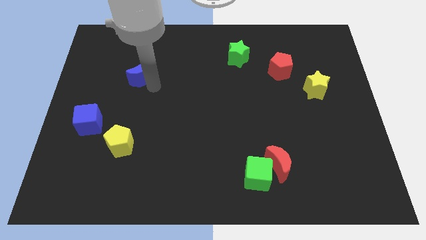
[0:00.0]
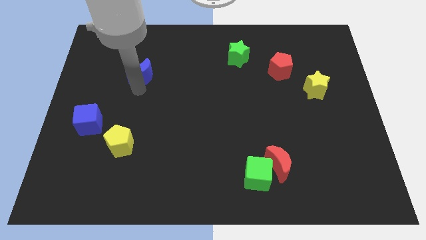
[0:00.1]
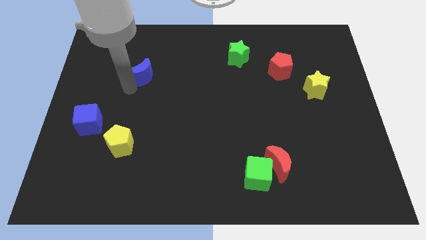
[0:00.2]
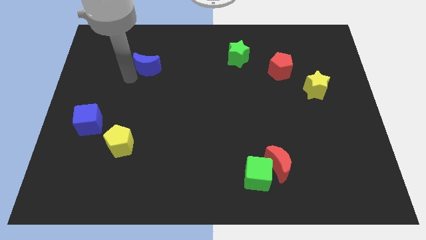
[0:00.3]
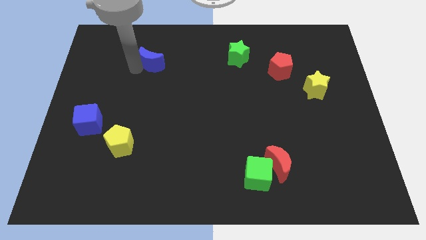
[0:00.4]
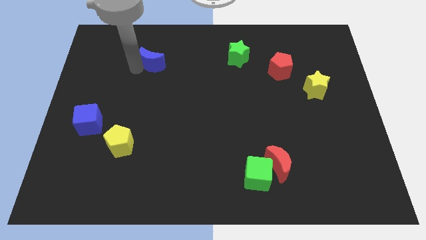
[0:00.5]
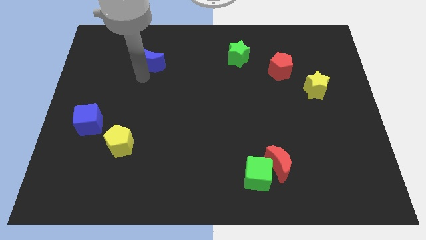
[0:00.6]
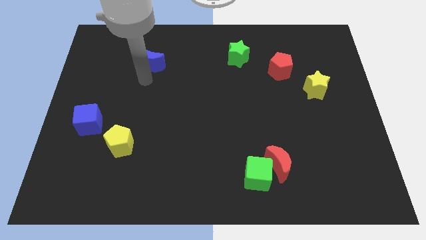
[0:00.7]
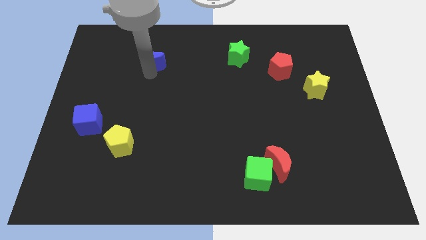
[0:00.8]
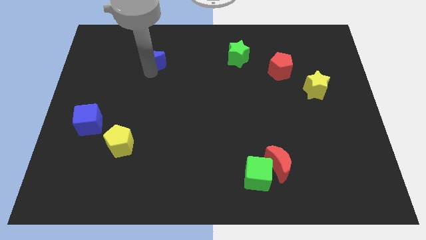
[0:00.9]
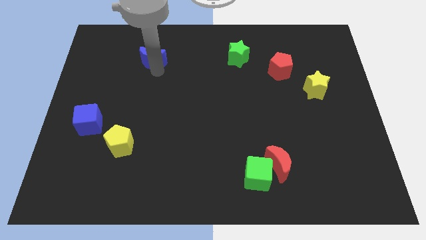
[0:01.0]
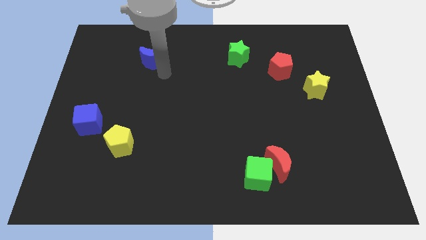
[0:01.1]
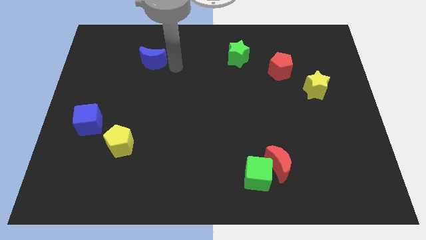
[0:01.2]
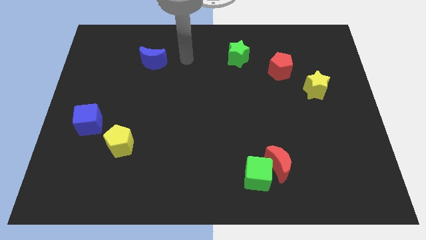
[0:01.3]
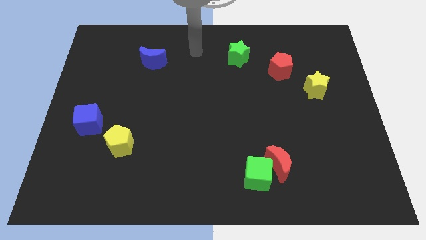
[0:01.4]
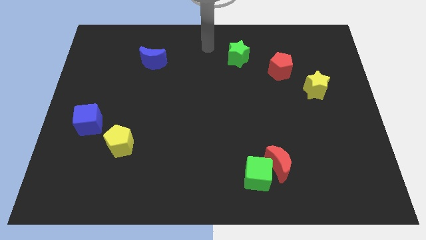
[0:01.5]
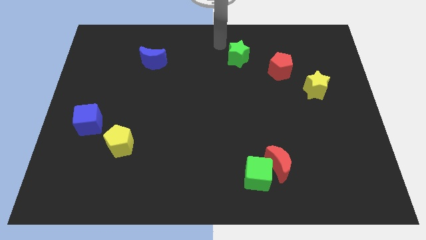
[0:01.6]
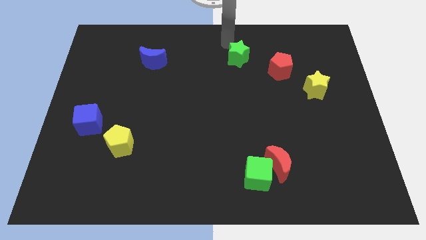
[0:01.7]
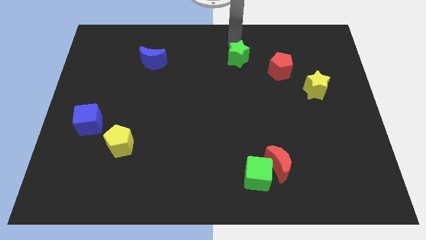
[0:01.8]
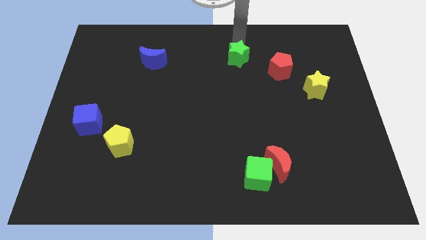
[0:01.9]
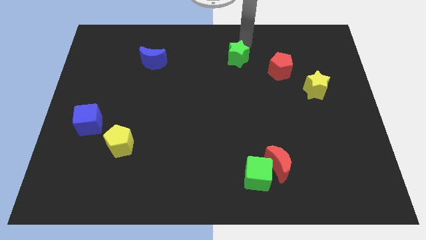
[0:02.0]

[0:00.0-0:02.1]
place the arm at the top right of the green star

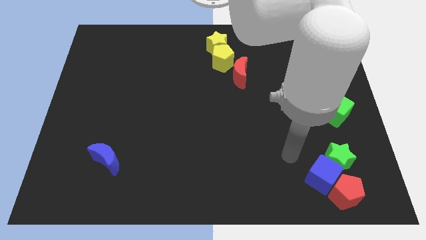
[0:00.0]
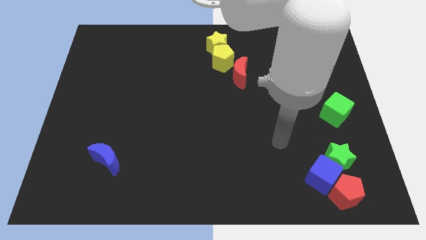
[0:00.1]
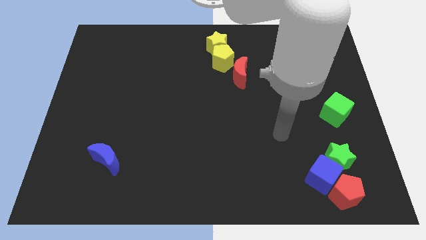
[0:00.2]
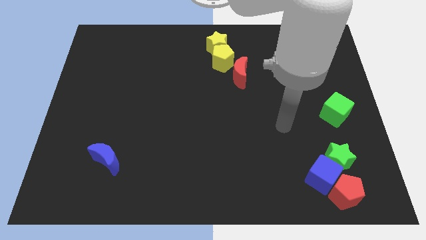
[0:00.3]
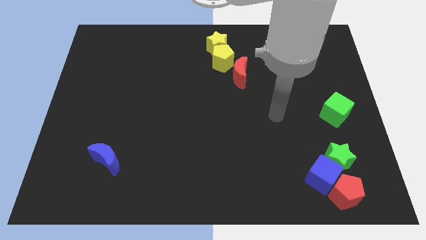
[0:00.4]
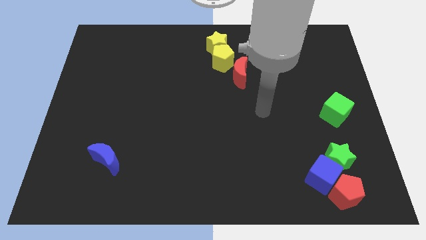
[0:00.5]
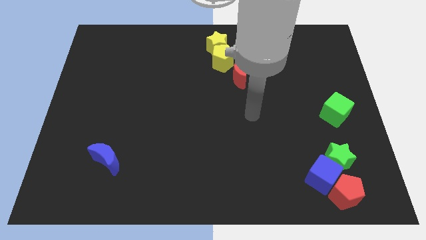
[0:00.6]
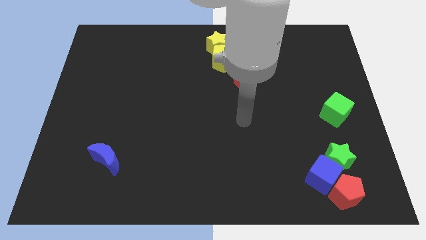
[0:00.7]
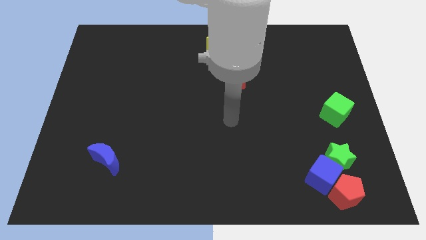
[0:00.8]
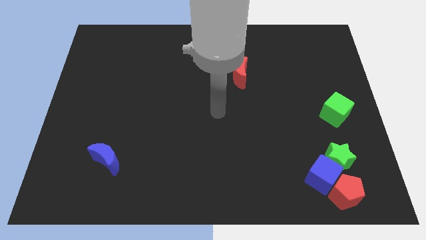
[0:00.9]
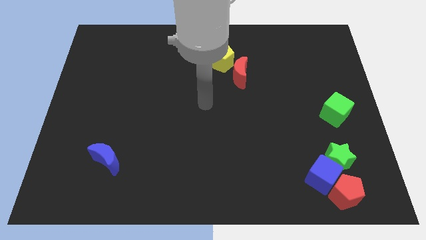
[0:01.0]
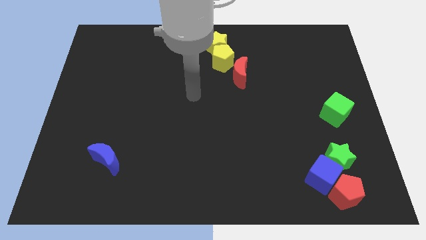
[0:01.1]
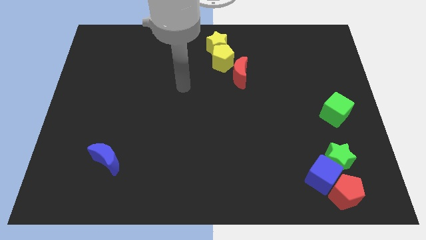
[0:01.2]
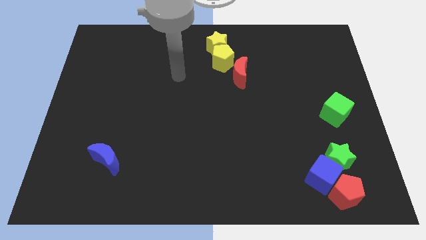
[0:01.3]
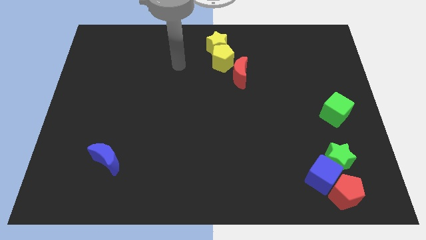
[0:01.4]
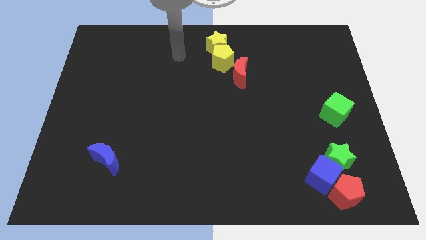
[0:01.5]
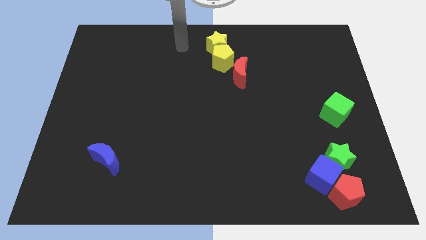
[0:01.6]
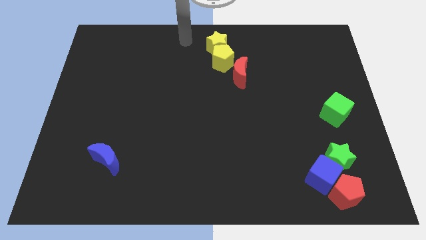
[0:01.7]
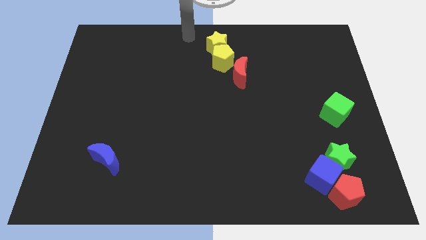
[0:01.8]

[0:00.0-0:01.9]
move your arm to the top center of the board

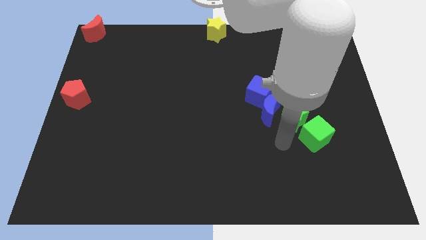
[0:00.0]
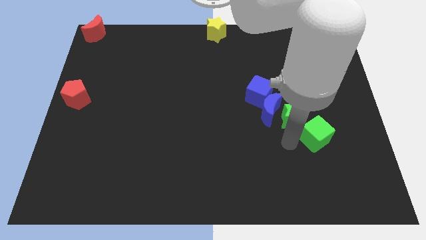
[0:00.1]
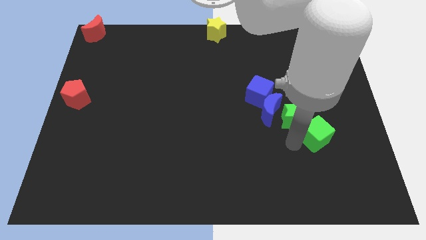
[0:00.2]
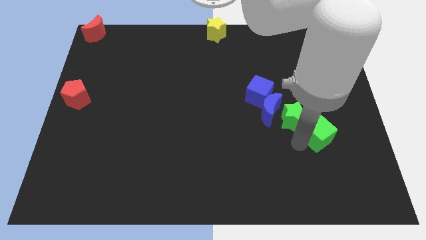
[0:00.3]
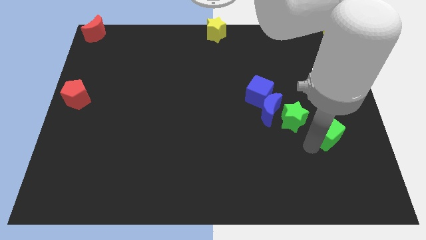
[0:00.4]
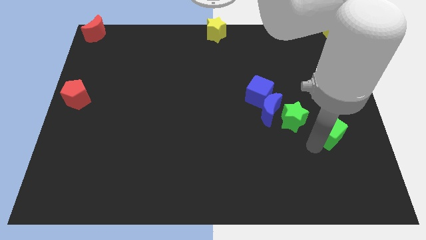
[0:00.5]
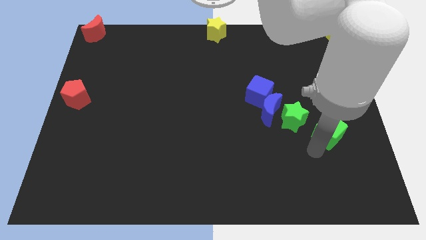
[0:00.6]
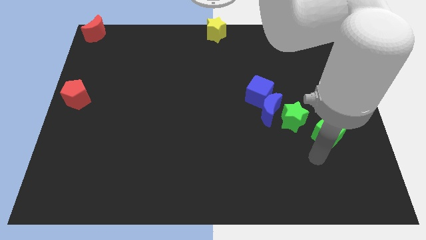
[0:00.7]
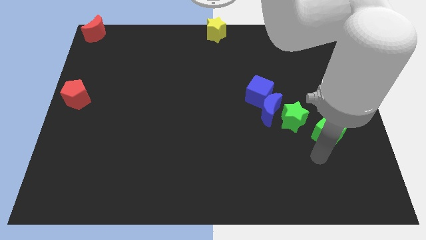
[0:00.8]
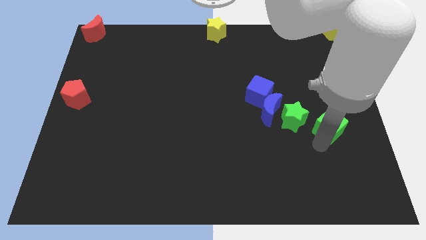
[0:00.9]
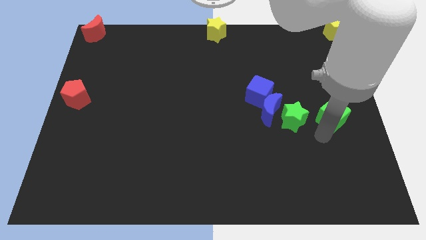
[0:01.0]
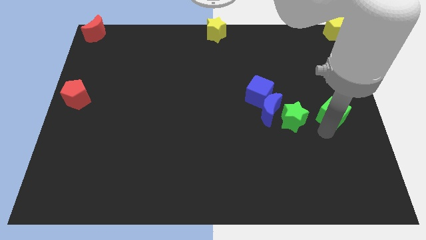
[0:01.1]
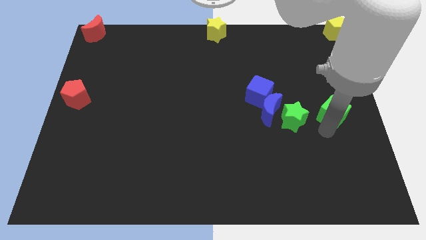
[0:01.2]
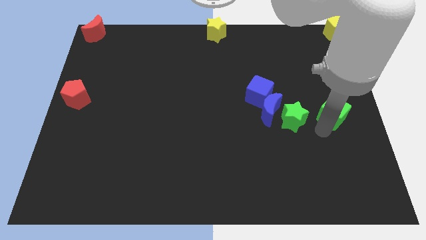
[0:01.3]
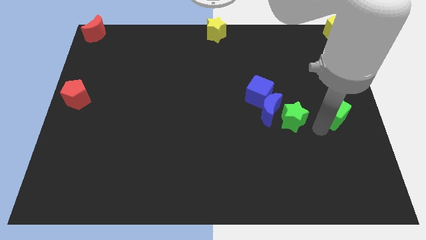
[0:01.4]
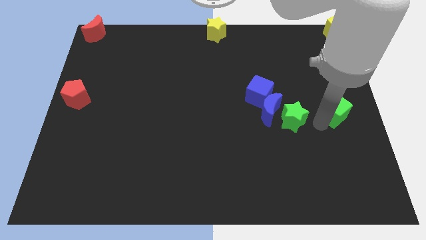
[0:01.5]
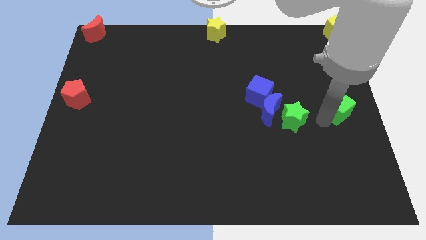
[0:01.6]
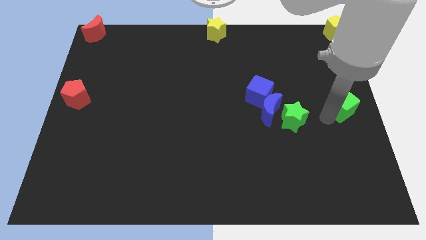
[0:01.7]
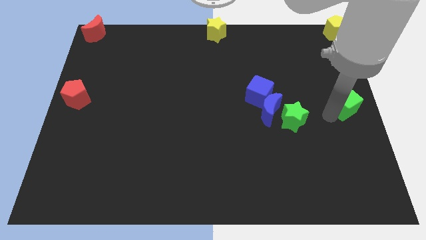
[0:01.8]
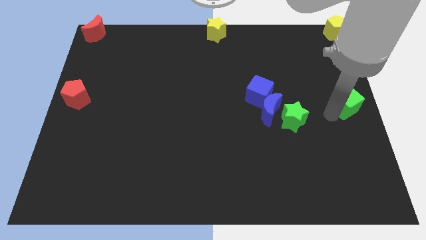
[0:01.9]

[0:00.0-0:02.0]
move the green cube to the center right of the board

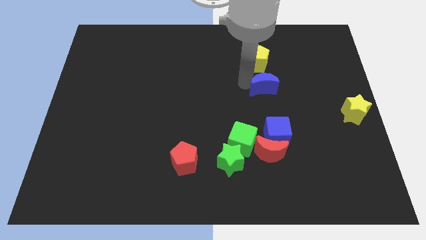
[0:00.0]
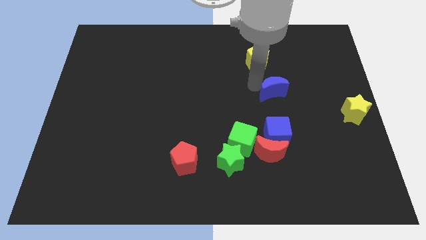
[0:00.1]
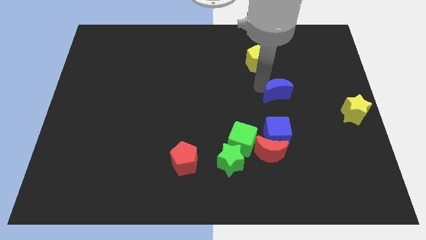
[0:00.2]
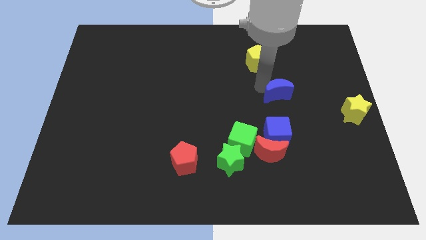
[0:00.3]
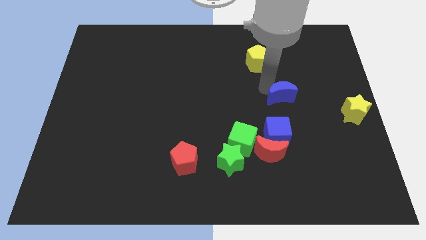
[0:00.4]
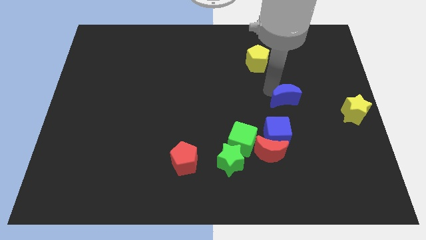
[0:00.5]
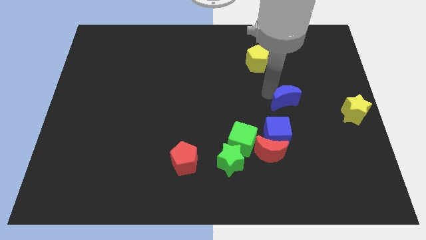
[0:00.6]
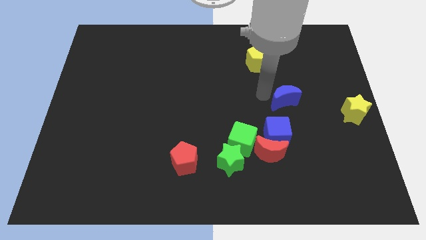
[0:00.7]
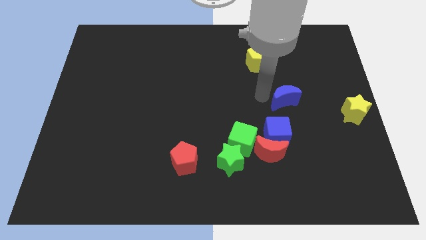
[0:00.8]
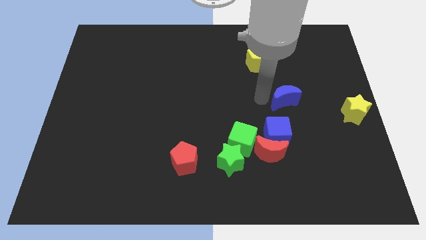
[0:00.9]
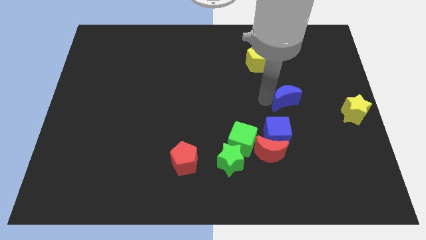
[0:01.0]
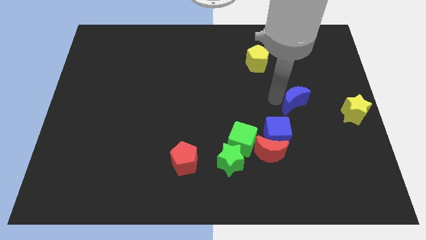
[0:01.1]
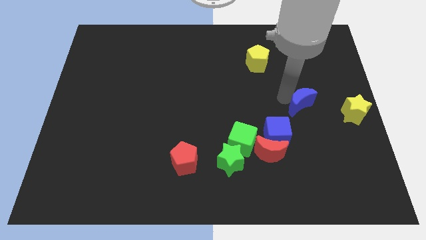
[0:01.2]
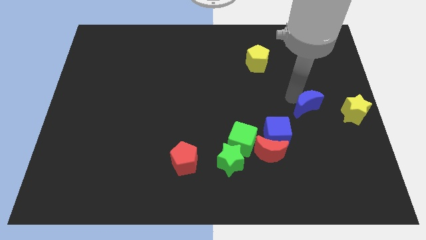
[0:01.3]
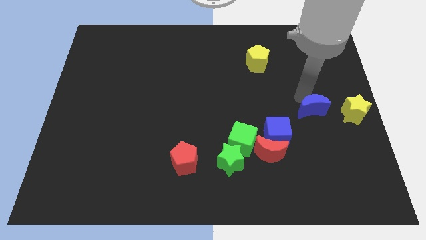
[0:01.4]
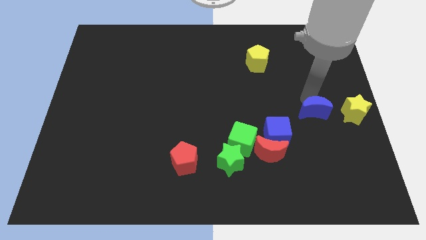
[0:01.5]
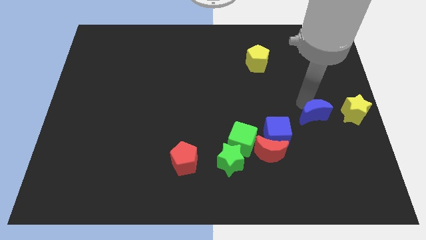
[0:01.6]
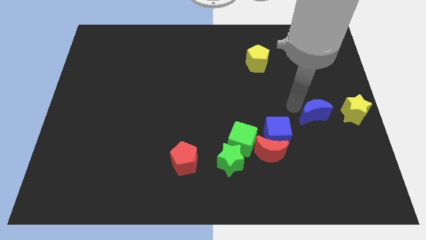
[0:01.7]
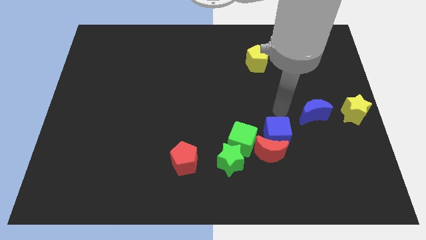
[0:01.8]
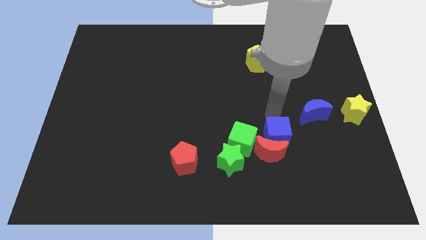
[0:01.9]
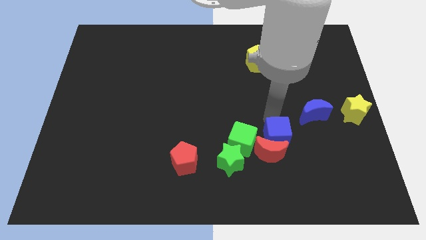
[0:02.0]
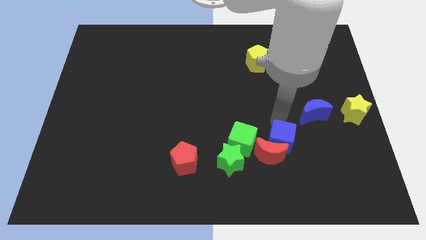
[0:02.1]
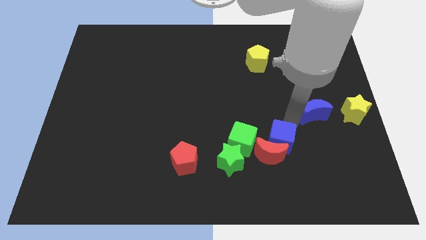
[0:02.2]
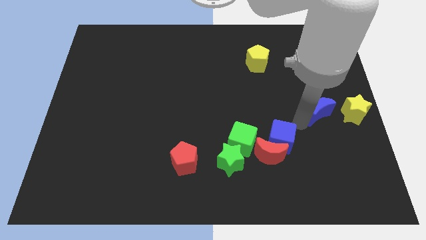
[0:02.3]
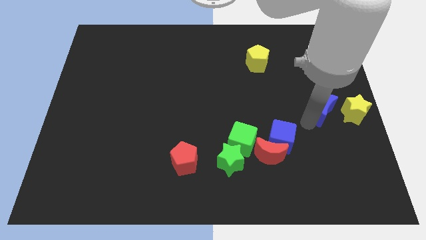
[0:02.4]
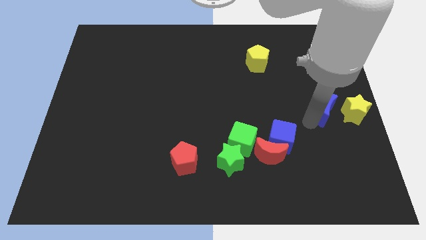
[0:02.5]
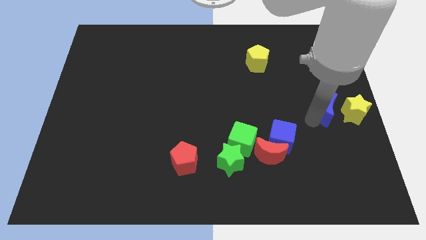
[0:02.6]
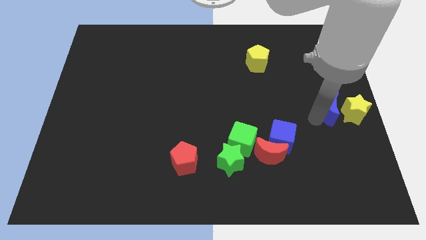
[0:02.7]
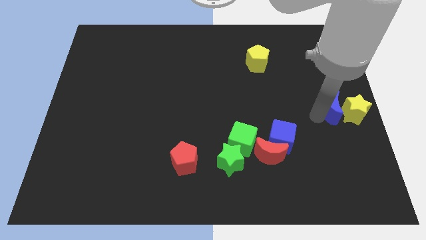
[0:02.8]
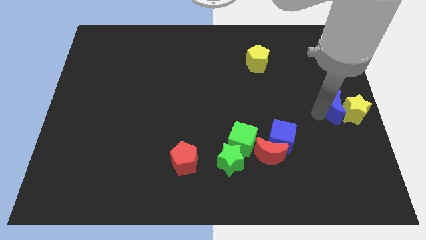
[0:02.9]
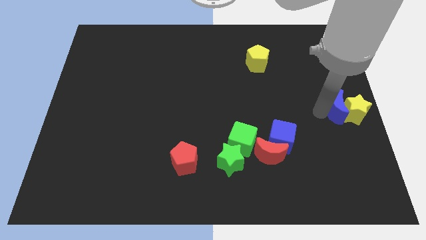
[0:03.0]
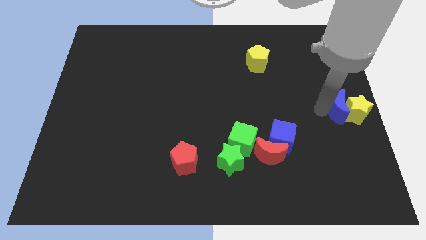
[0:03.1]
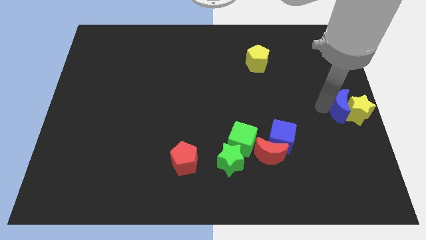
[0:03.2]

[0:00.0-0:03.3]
slide the blue crescent into the left side of the yellow star
